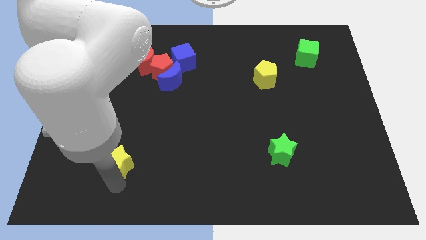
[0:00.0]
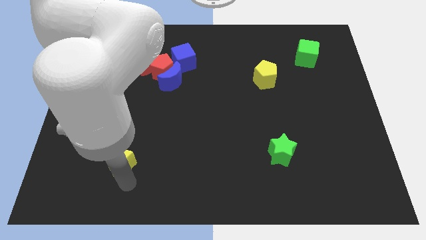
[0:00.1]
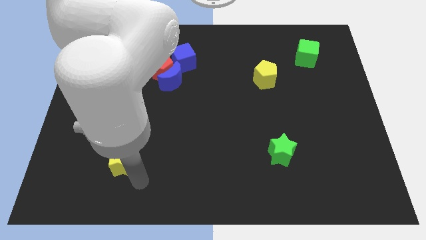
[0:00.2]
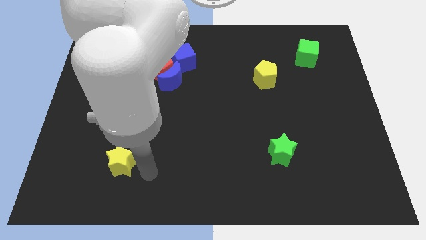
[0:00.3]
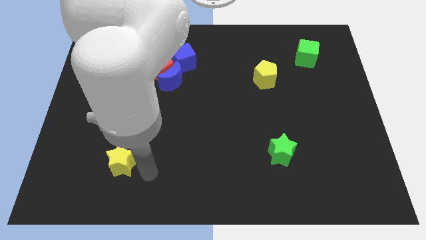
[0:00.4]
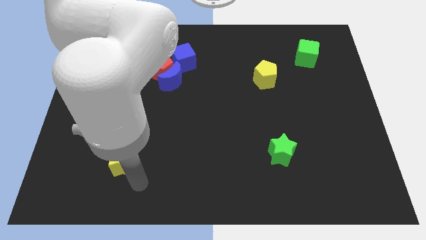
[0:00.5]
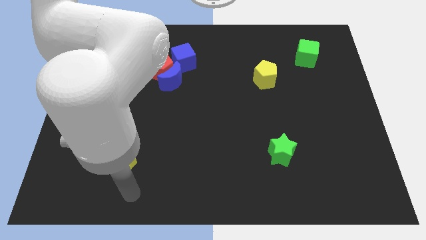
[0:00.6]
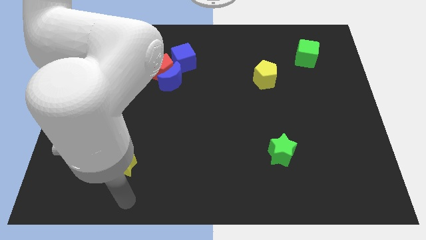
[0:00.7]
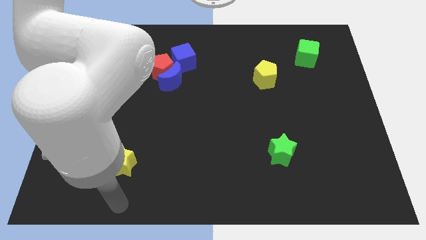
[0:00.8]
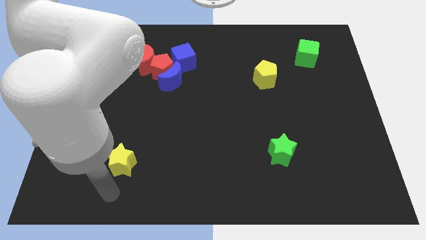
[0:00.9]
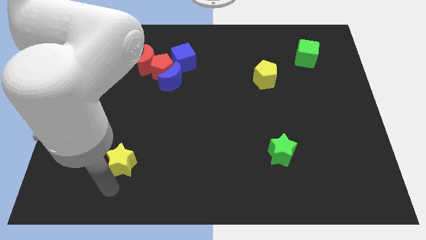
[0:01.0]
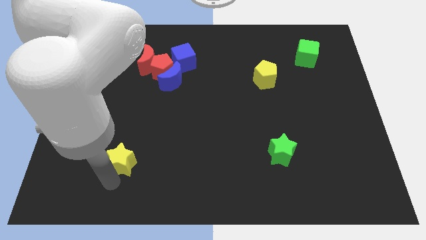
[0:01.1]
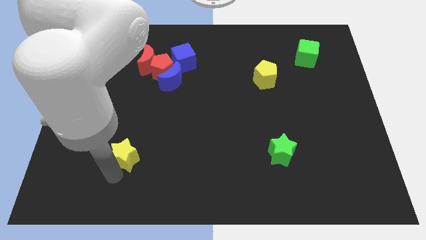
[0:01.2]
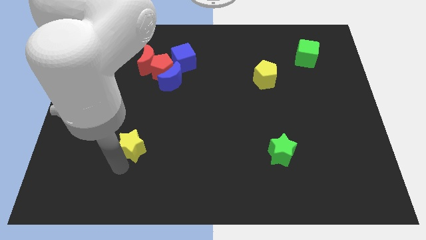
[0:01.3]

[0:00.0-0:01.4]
slide the yellow star up slightly

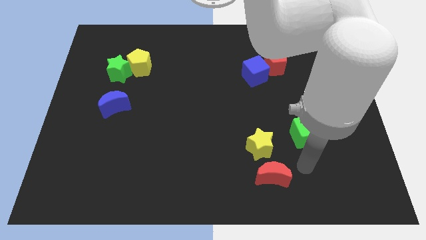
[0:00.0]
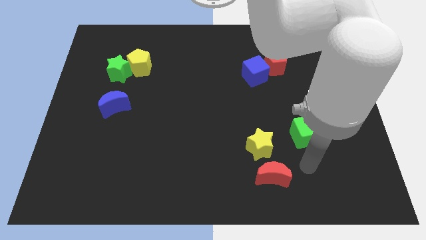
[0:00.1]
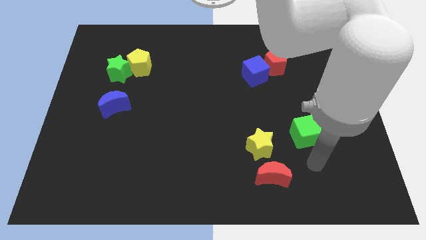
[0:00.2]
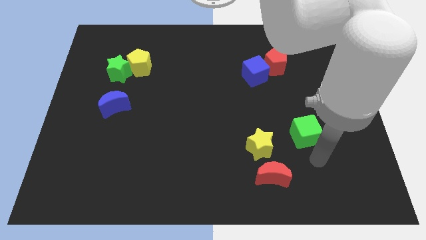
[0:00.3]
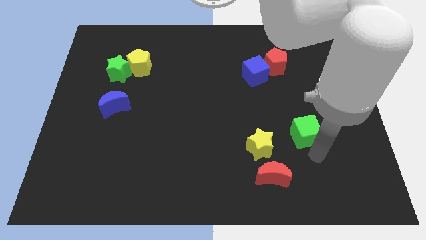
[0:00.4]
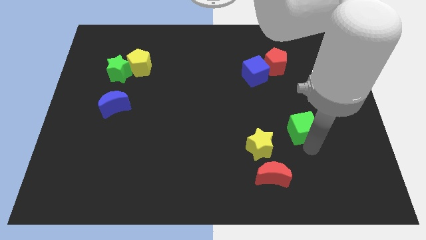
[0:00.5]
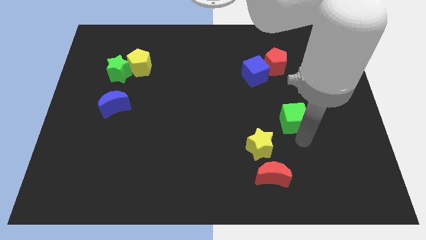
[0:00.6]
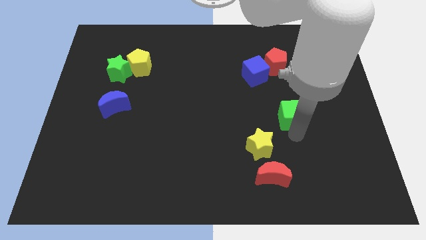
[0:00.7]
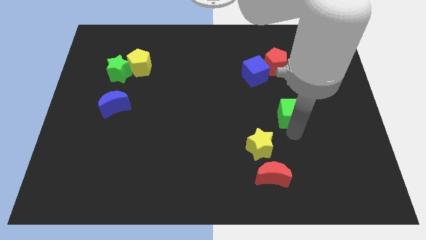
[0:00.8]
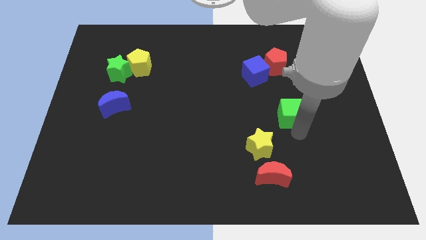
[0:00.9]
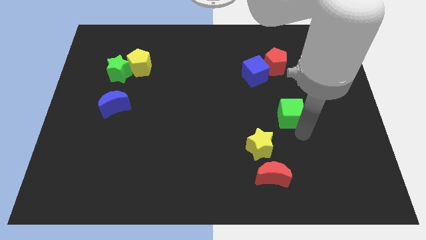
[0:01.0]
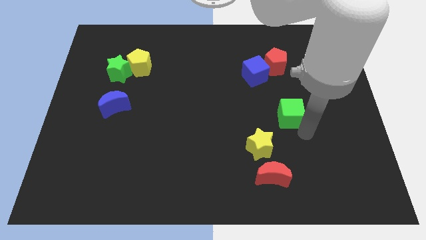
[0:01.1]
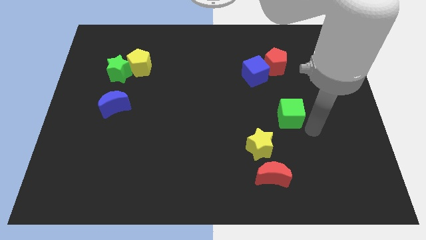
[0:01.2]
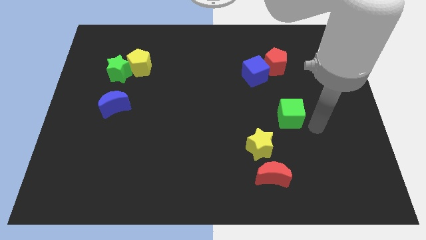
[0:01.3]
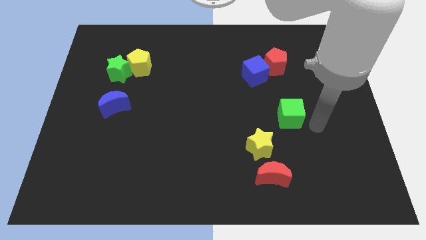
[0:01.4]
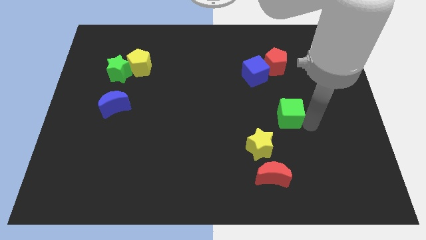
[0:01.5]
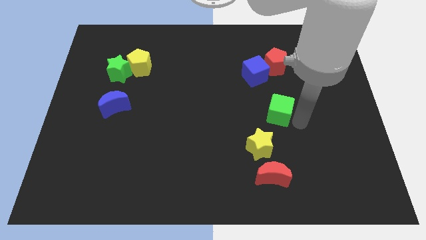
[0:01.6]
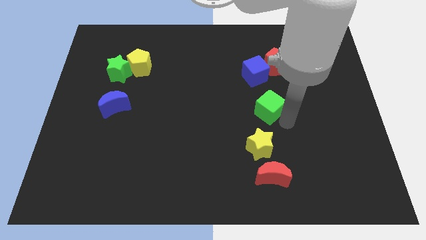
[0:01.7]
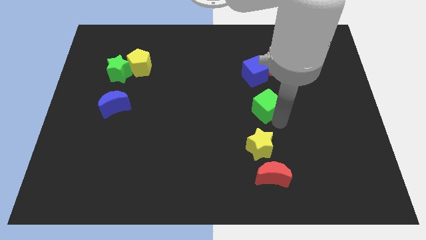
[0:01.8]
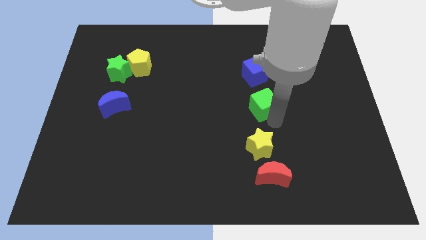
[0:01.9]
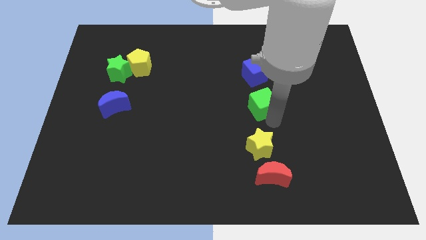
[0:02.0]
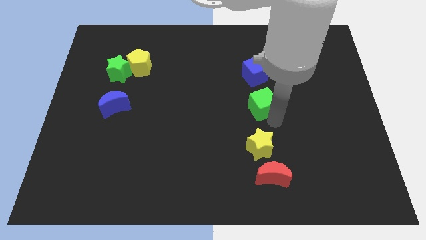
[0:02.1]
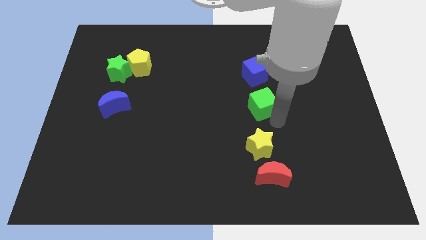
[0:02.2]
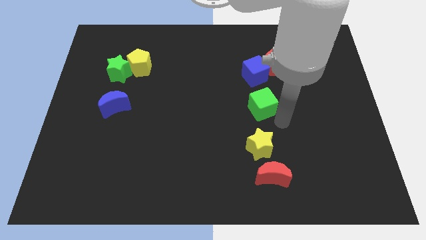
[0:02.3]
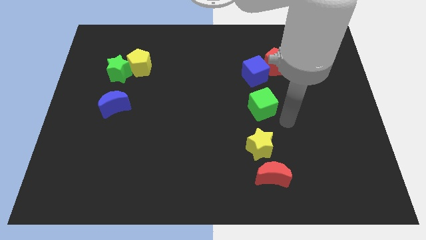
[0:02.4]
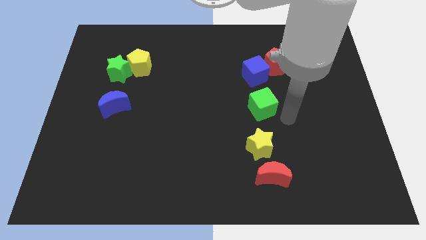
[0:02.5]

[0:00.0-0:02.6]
place the green cube in between the blue cube and the yellow star

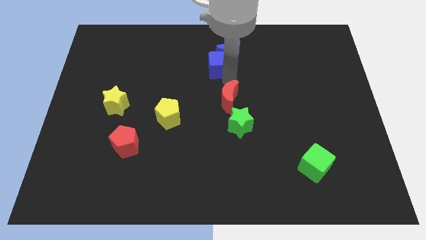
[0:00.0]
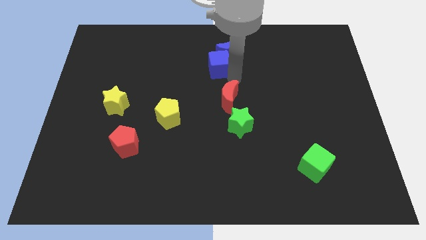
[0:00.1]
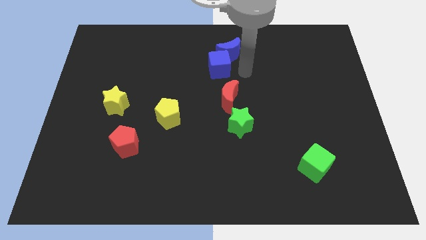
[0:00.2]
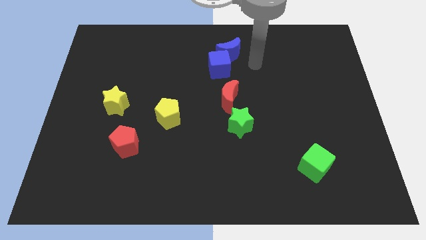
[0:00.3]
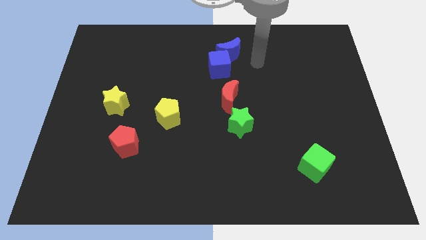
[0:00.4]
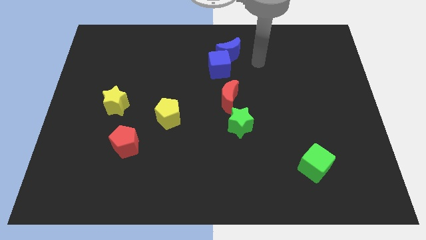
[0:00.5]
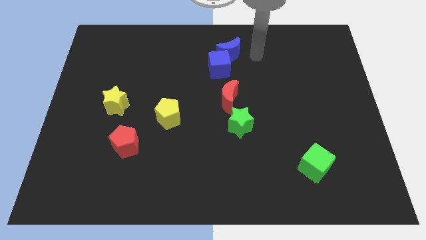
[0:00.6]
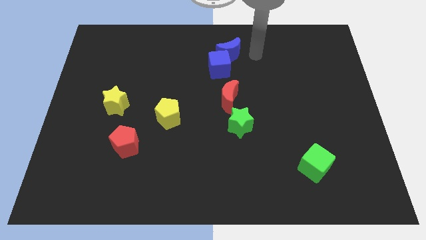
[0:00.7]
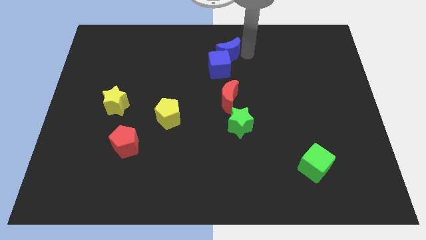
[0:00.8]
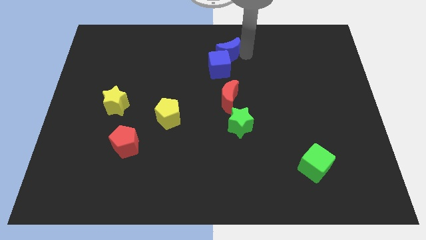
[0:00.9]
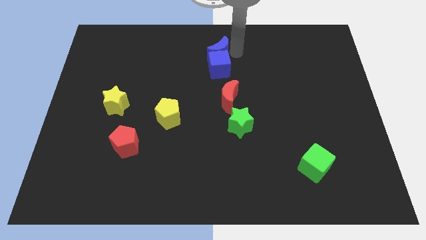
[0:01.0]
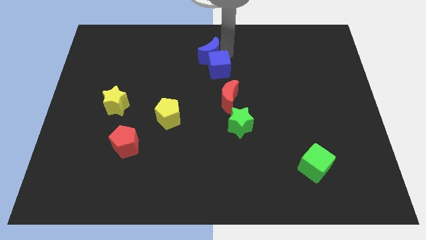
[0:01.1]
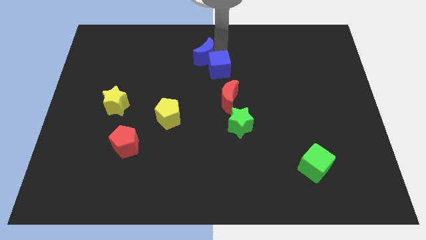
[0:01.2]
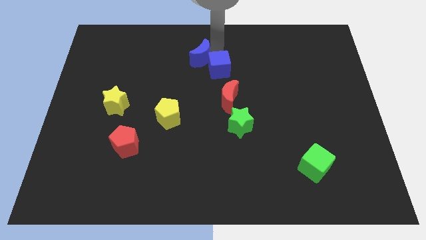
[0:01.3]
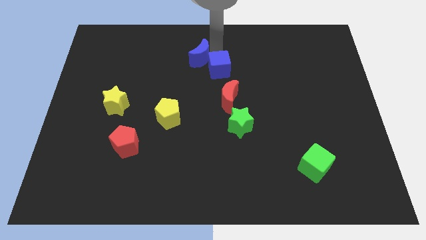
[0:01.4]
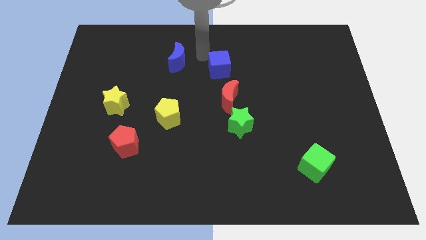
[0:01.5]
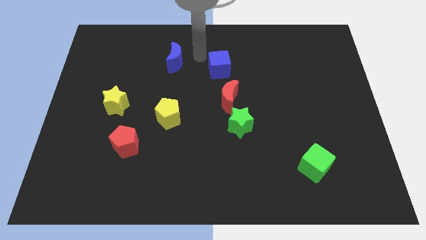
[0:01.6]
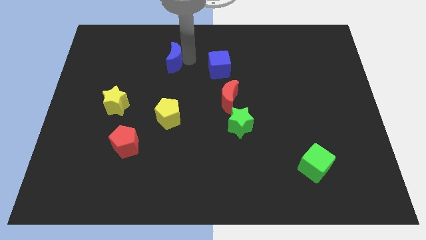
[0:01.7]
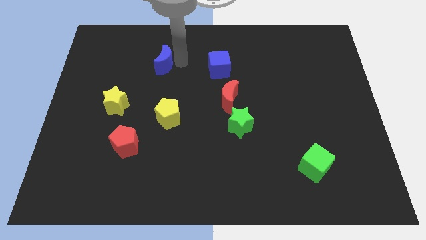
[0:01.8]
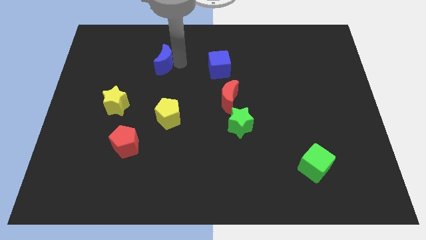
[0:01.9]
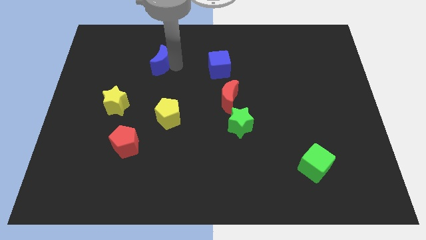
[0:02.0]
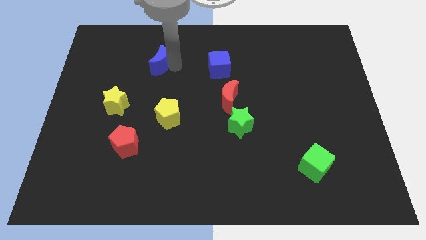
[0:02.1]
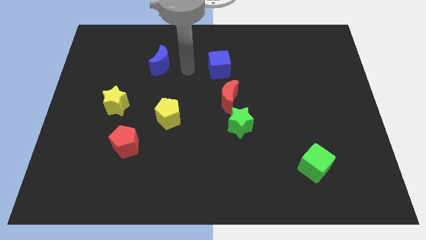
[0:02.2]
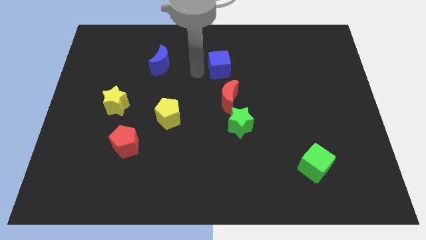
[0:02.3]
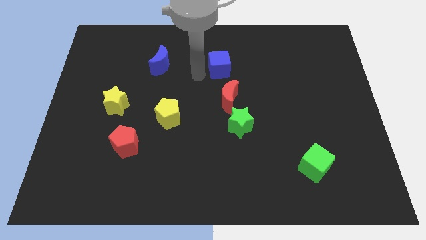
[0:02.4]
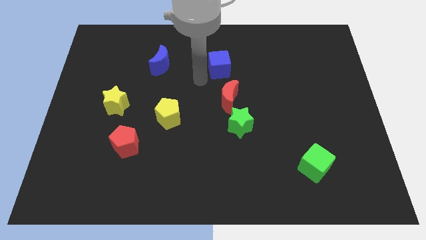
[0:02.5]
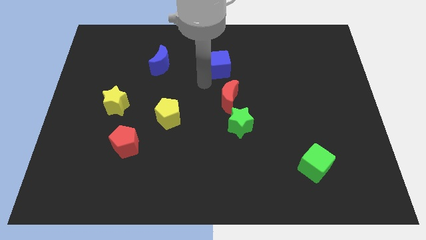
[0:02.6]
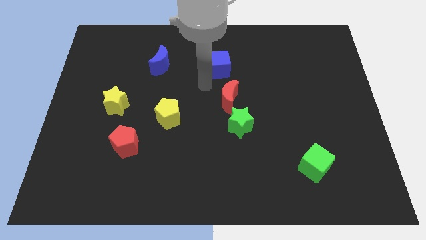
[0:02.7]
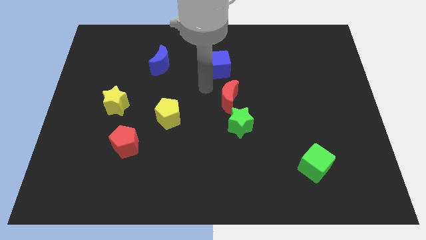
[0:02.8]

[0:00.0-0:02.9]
move the blue crescent towards the left side

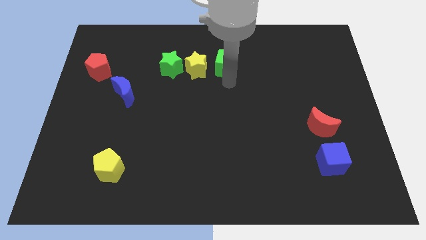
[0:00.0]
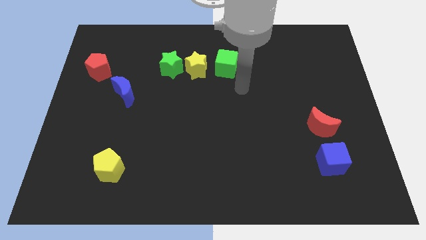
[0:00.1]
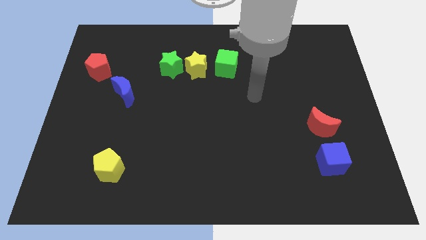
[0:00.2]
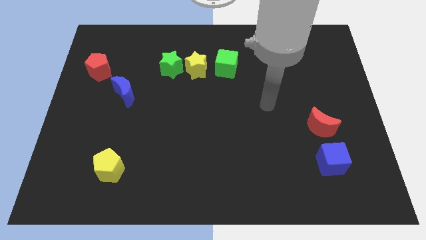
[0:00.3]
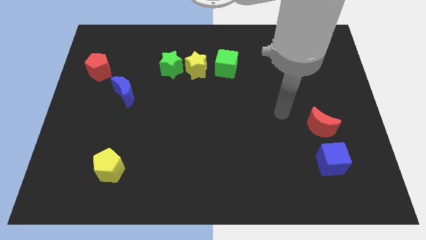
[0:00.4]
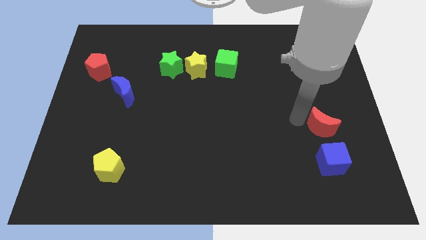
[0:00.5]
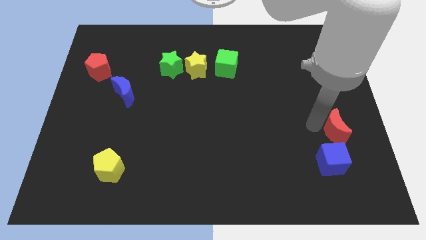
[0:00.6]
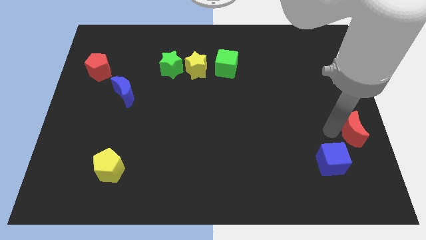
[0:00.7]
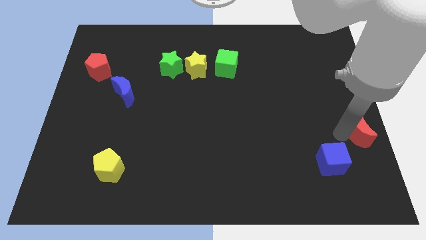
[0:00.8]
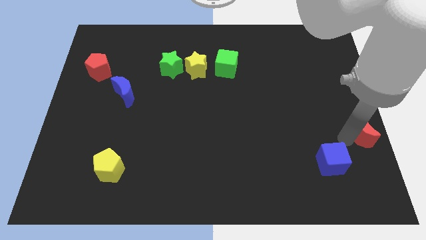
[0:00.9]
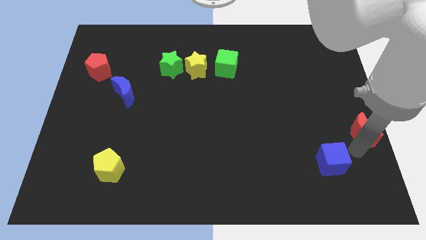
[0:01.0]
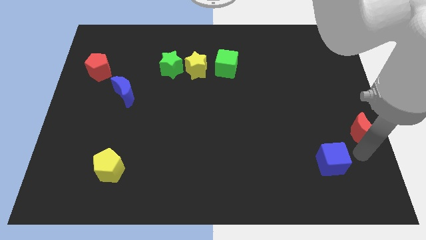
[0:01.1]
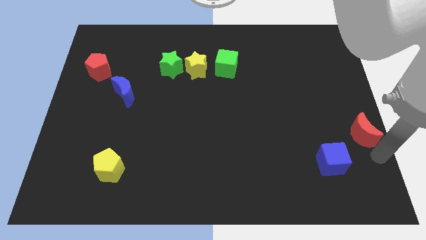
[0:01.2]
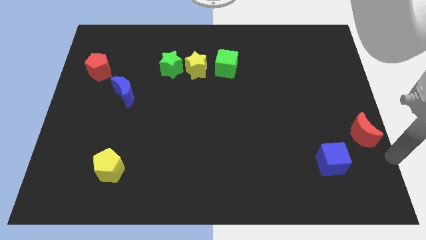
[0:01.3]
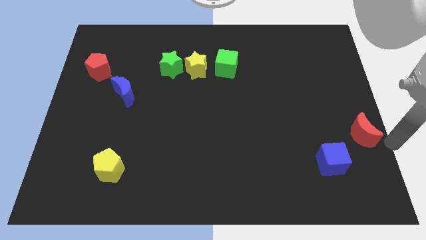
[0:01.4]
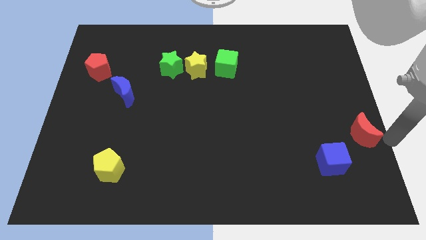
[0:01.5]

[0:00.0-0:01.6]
move the red moon to the right of the board

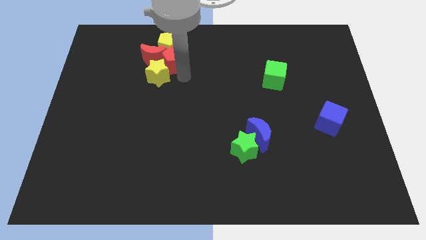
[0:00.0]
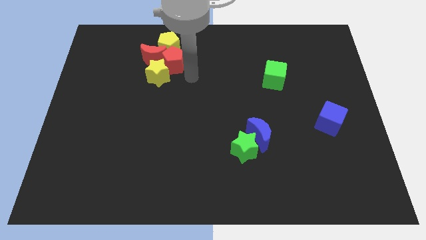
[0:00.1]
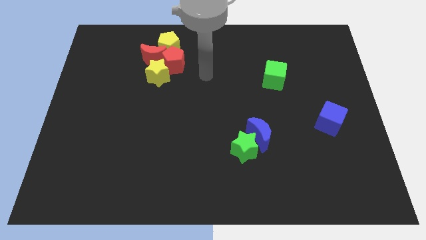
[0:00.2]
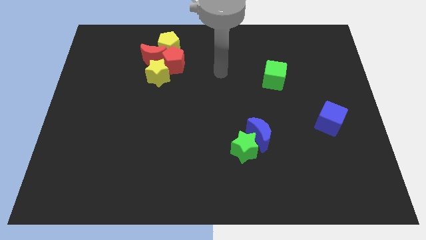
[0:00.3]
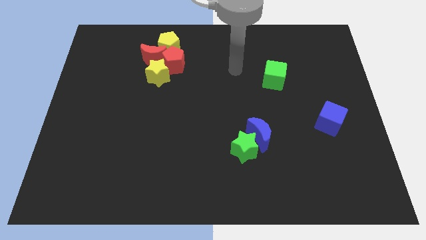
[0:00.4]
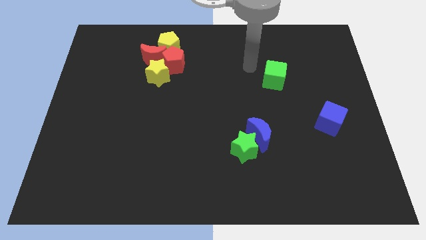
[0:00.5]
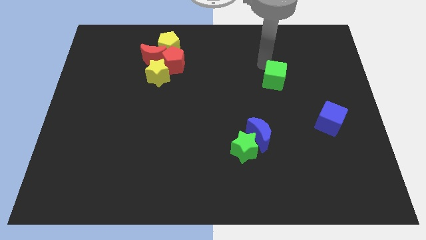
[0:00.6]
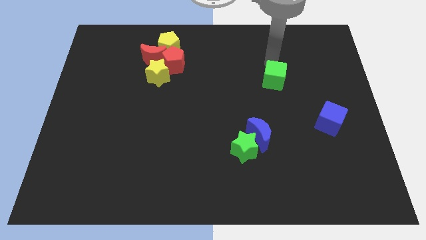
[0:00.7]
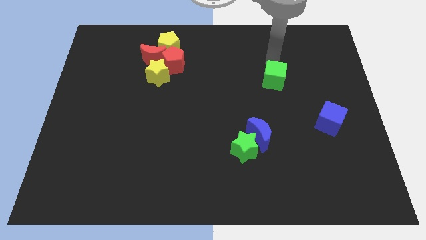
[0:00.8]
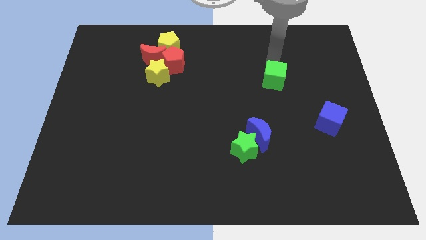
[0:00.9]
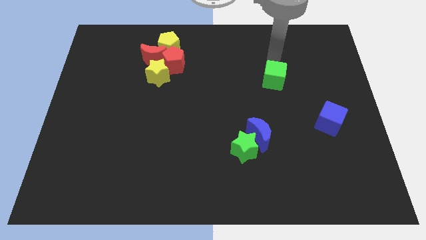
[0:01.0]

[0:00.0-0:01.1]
point your arm at the top of green cube
